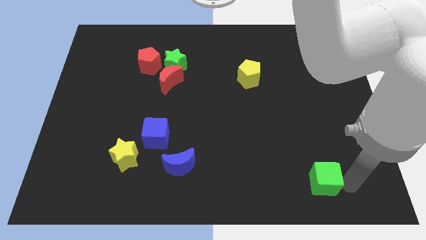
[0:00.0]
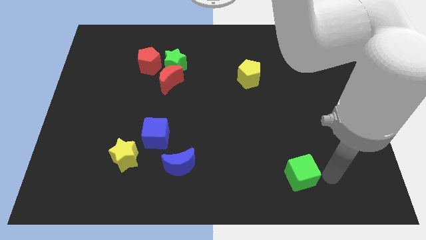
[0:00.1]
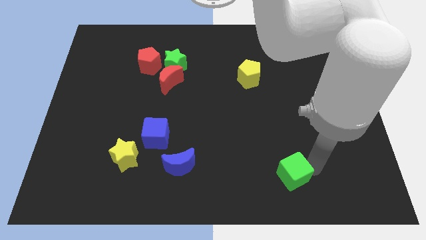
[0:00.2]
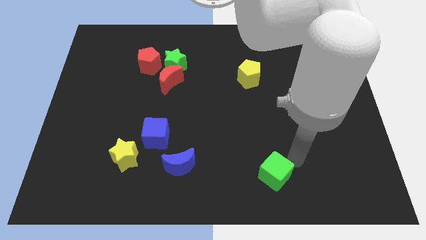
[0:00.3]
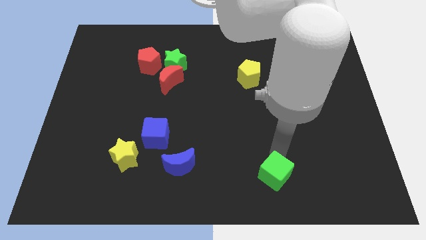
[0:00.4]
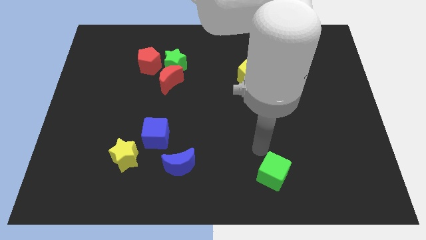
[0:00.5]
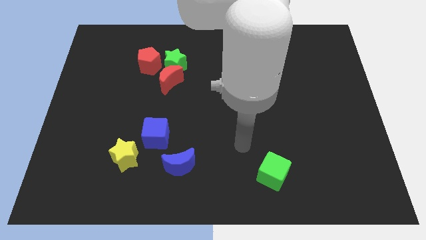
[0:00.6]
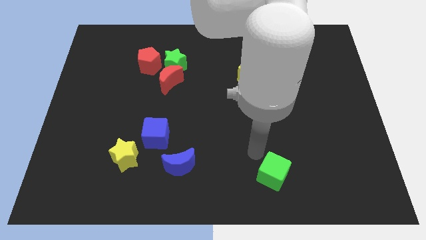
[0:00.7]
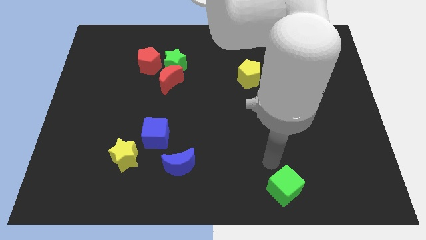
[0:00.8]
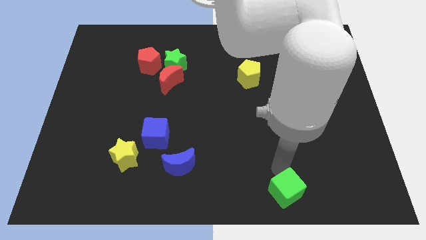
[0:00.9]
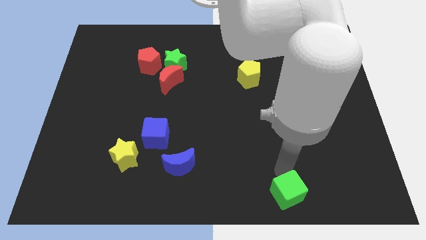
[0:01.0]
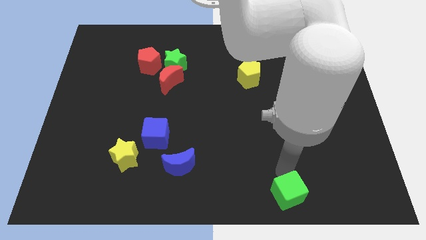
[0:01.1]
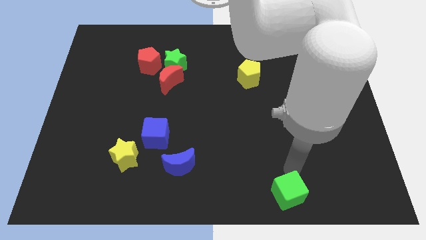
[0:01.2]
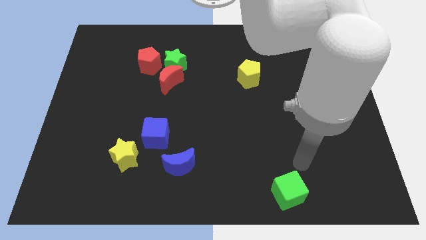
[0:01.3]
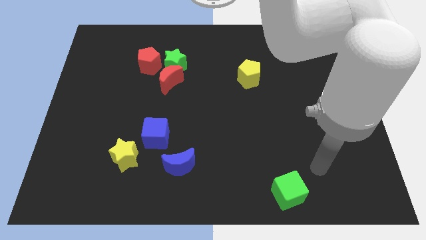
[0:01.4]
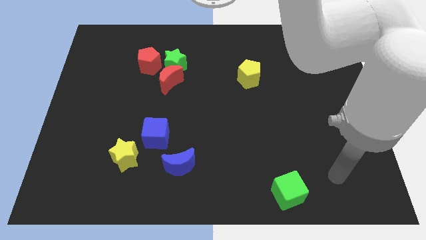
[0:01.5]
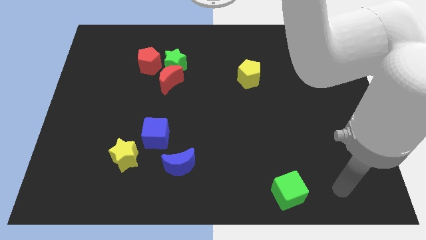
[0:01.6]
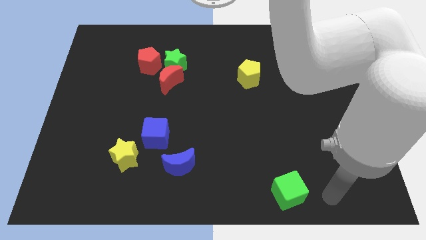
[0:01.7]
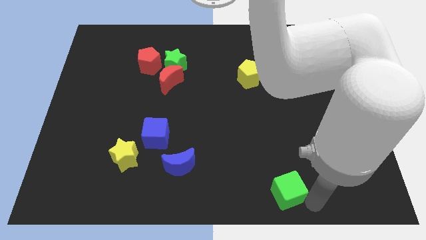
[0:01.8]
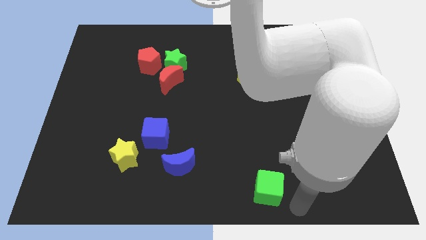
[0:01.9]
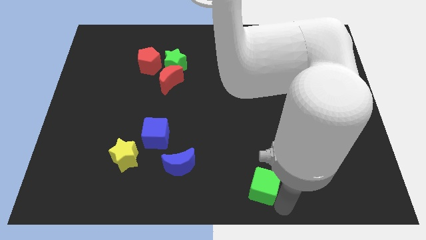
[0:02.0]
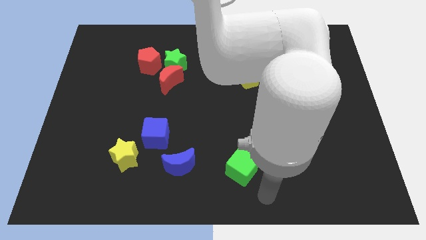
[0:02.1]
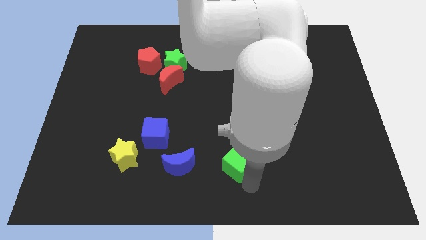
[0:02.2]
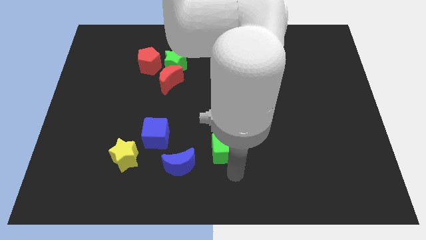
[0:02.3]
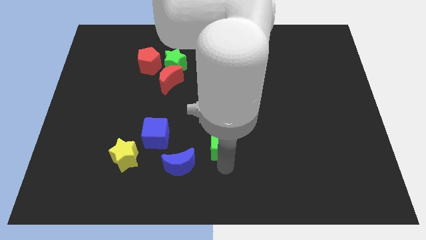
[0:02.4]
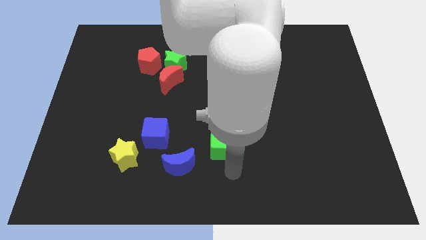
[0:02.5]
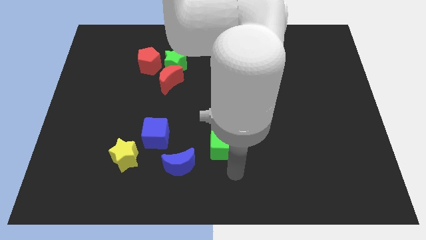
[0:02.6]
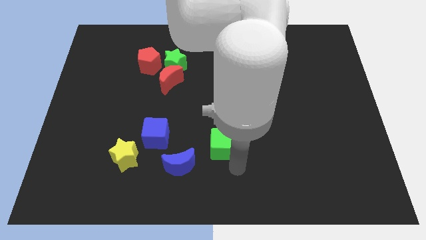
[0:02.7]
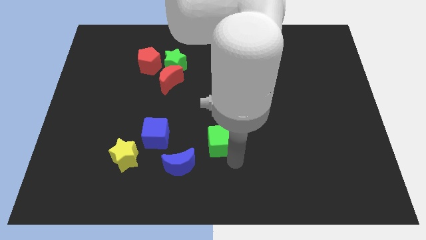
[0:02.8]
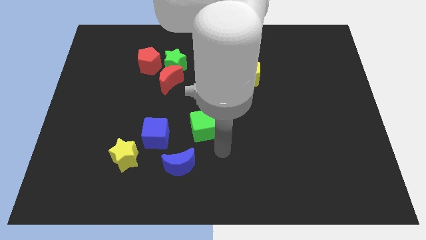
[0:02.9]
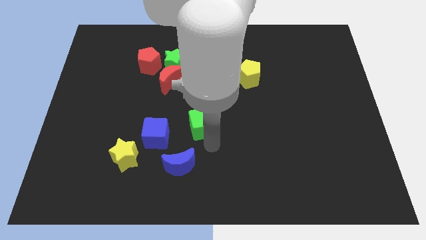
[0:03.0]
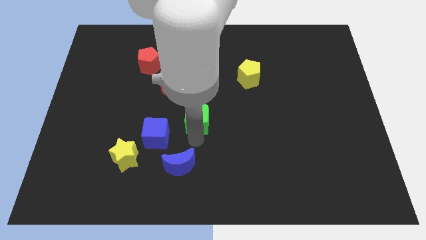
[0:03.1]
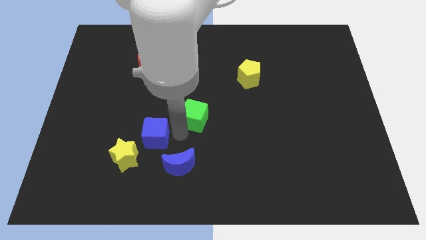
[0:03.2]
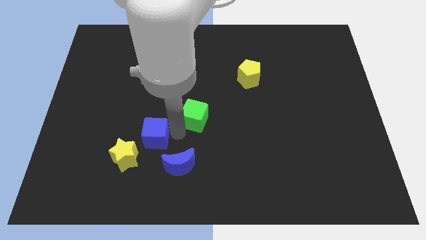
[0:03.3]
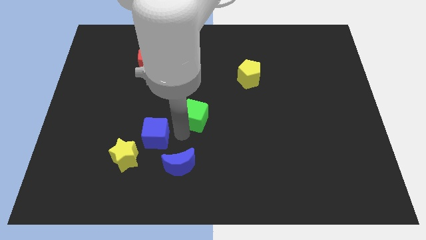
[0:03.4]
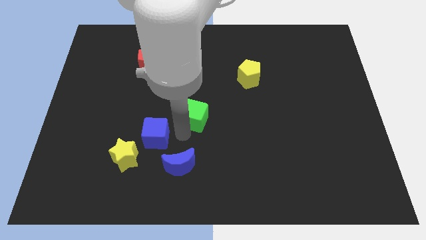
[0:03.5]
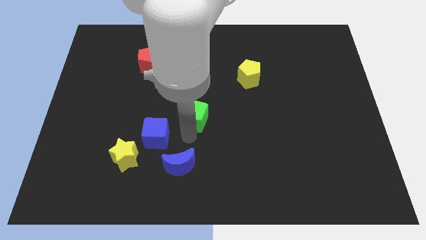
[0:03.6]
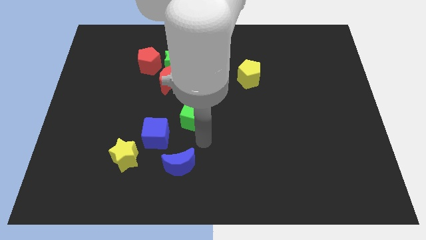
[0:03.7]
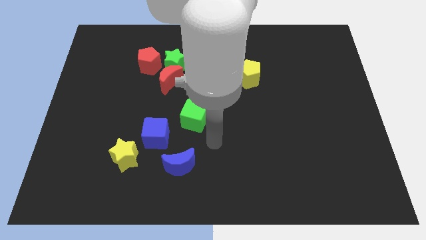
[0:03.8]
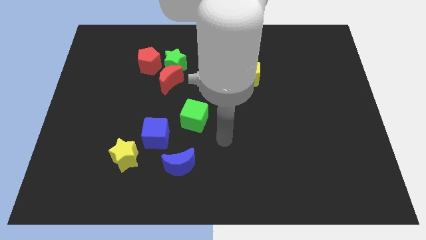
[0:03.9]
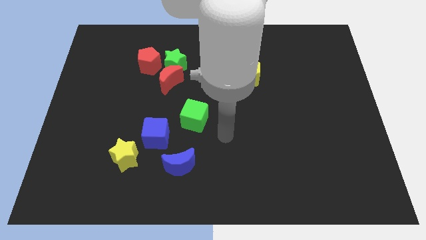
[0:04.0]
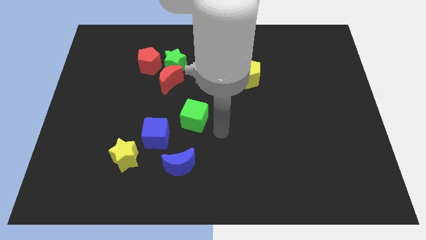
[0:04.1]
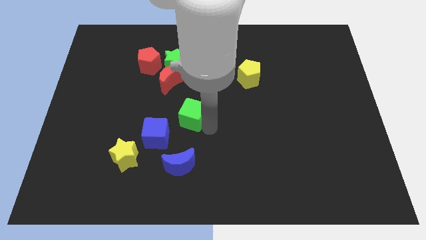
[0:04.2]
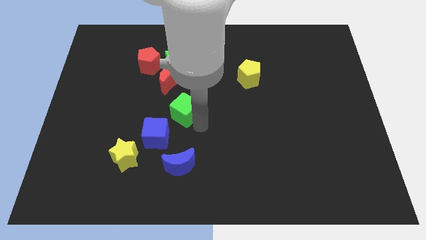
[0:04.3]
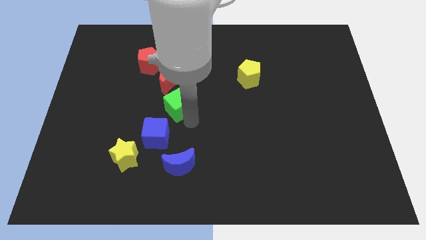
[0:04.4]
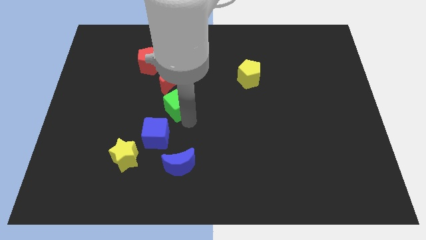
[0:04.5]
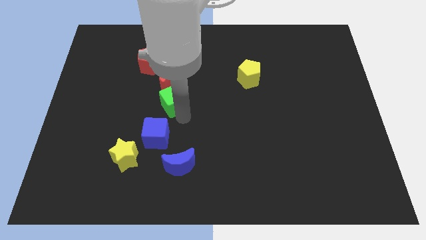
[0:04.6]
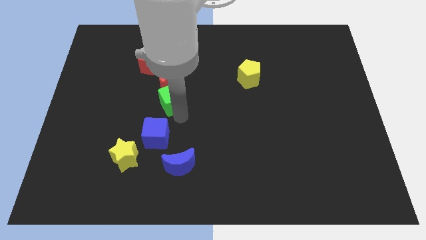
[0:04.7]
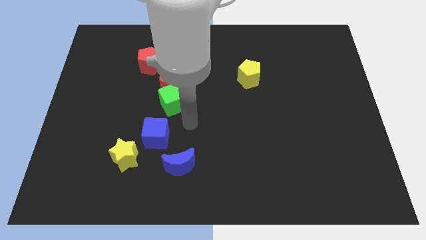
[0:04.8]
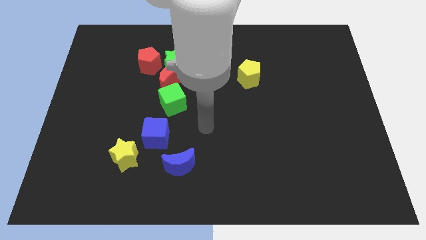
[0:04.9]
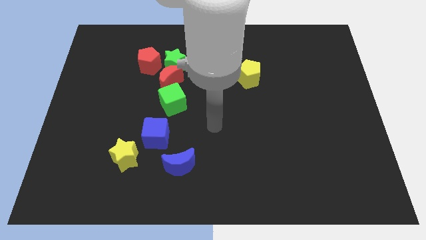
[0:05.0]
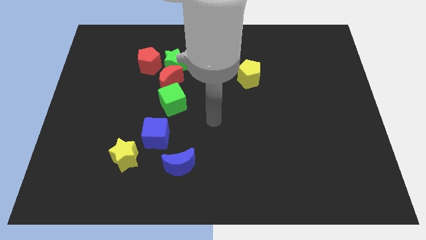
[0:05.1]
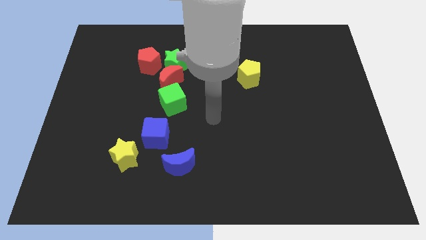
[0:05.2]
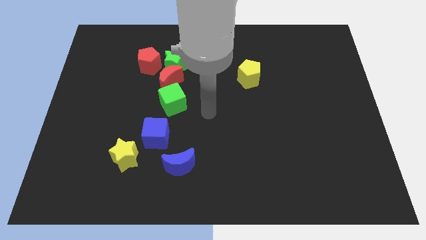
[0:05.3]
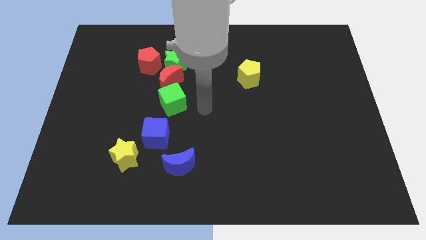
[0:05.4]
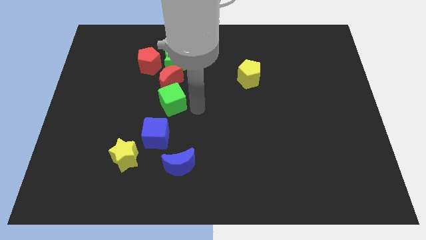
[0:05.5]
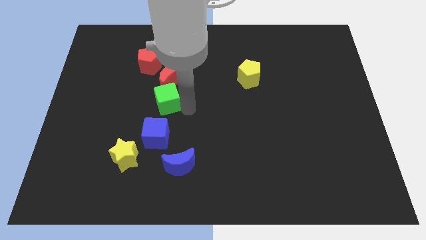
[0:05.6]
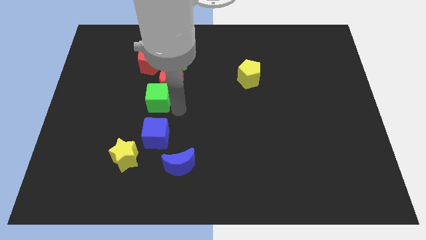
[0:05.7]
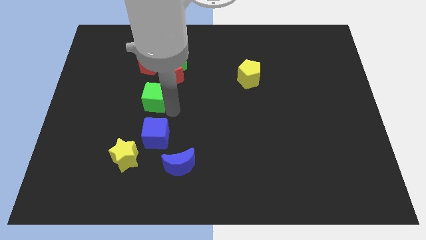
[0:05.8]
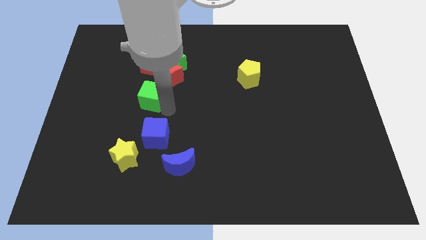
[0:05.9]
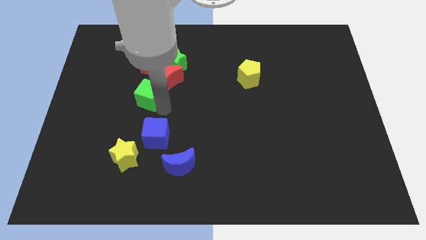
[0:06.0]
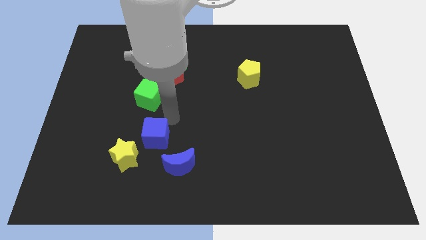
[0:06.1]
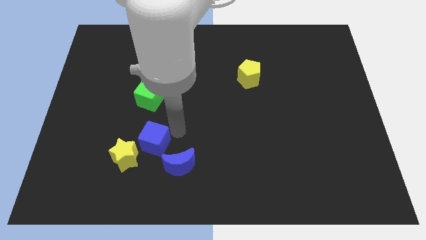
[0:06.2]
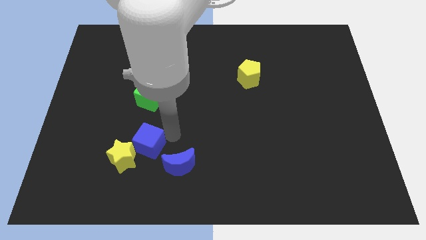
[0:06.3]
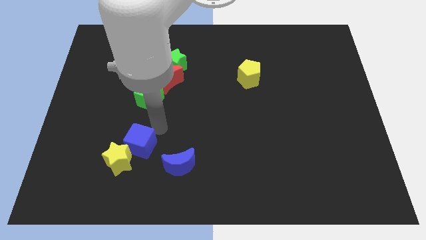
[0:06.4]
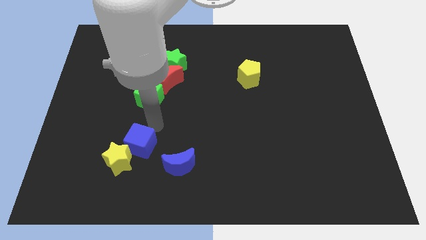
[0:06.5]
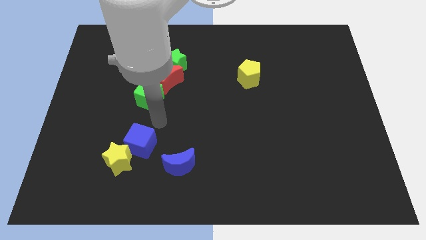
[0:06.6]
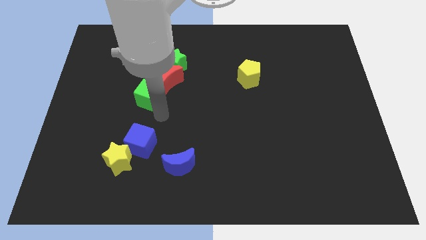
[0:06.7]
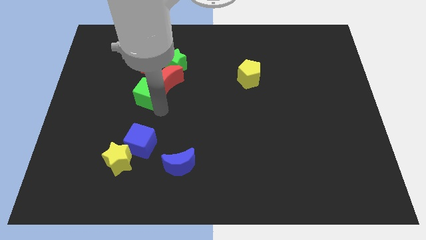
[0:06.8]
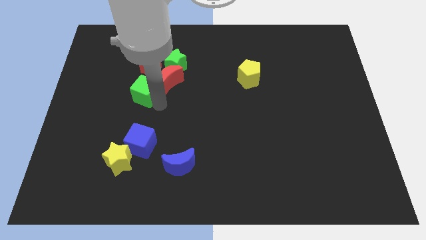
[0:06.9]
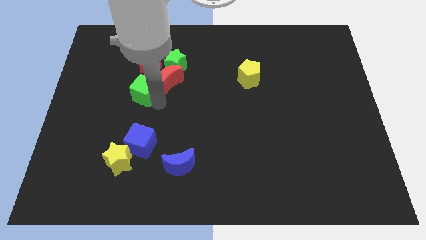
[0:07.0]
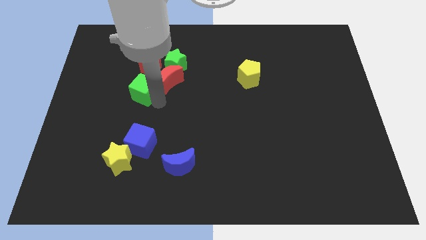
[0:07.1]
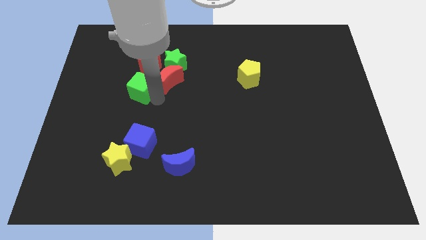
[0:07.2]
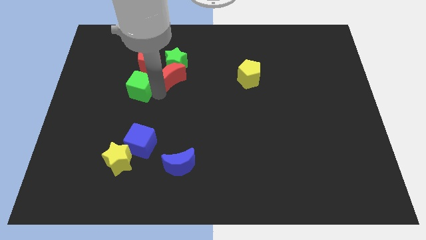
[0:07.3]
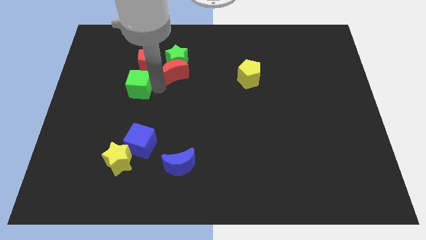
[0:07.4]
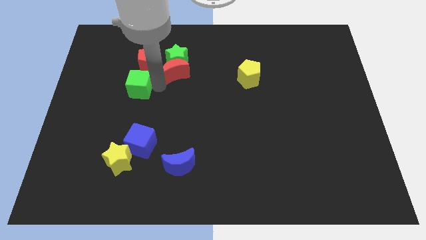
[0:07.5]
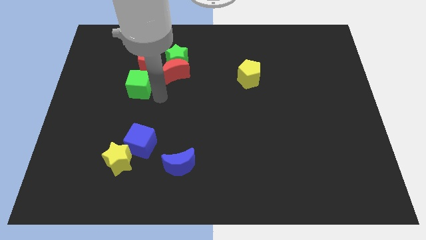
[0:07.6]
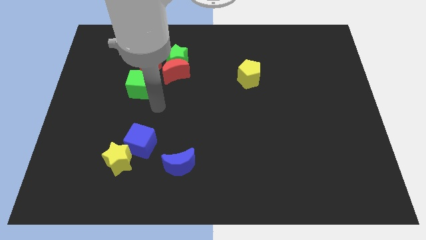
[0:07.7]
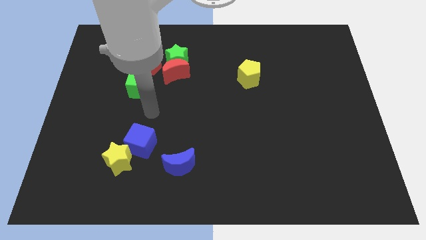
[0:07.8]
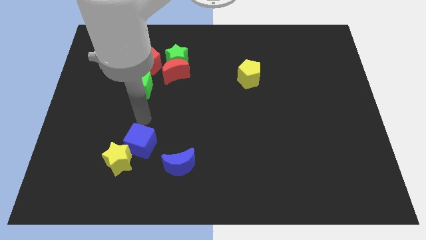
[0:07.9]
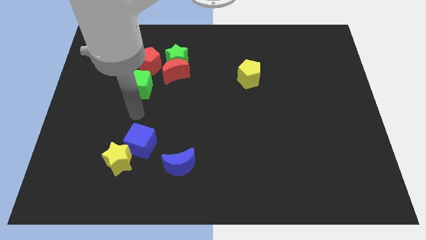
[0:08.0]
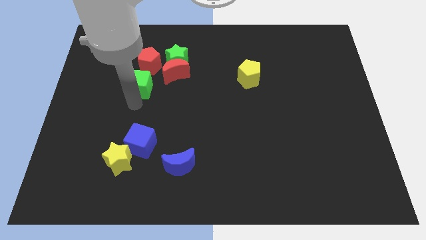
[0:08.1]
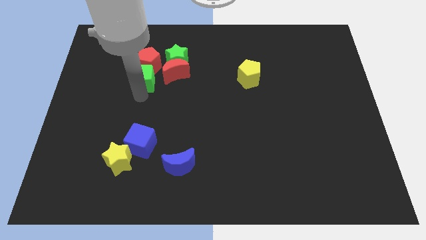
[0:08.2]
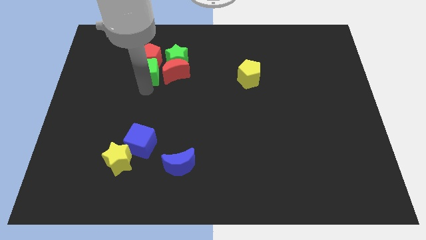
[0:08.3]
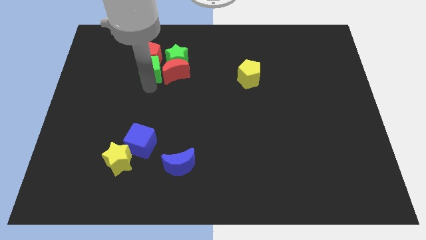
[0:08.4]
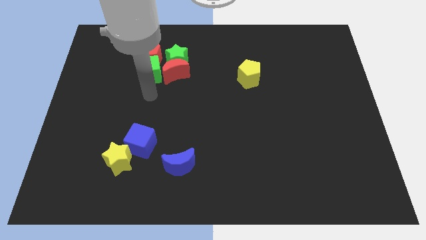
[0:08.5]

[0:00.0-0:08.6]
move the green cube into the bottom of the red pentagon

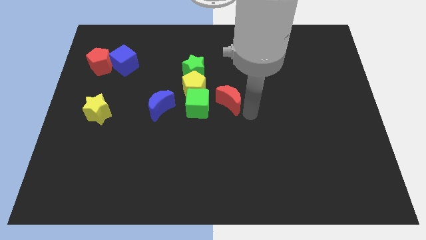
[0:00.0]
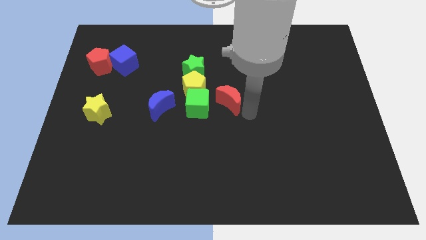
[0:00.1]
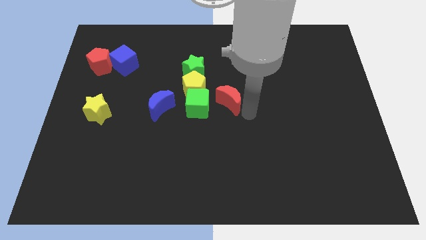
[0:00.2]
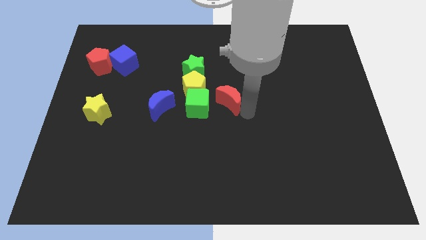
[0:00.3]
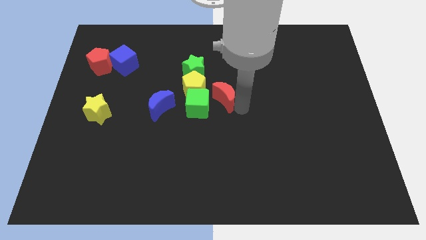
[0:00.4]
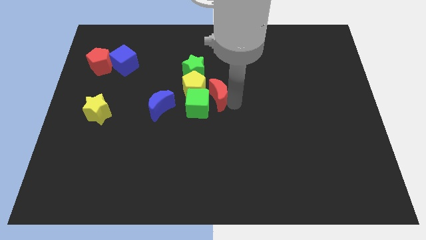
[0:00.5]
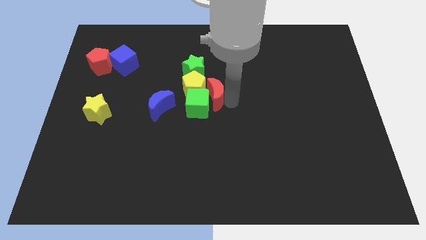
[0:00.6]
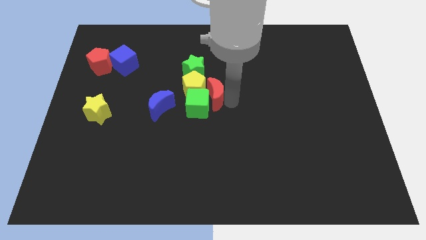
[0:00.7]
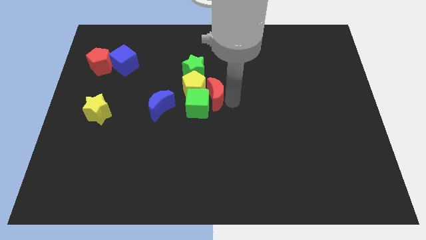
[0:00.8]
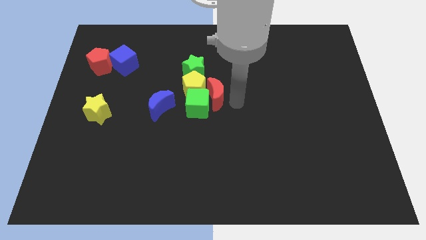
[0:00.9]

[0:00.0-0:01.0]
push the red crescent towards the right side of the yellow pentagon
